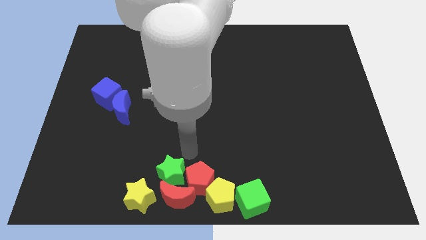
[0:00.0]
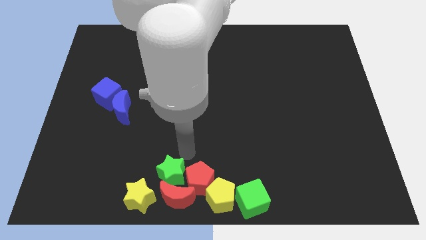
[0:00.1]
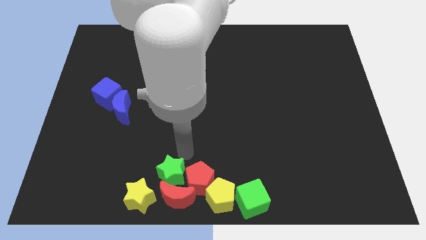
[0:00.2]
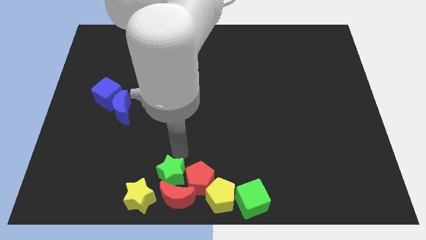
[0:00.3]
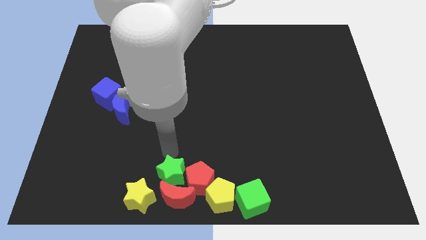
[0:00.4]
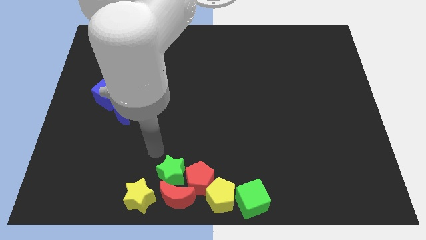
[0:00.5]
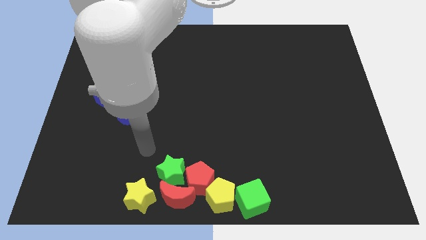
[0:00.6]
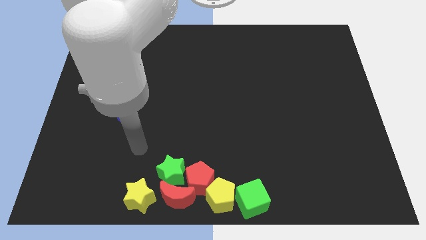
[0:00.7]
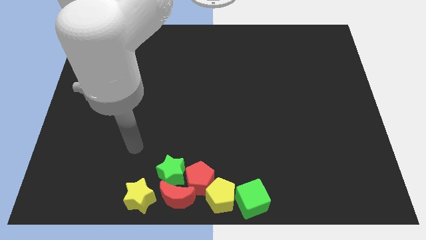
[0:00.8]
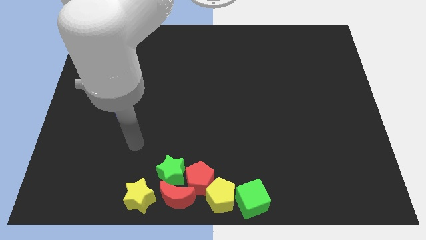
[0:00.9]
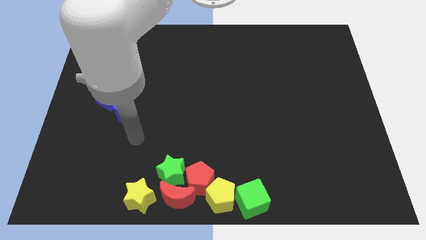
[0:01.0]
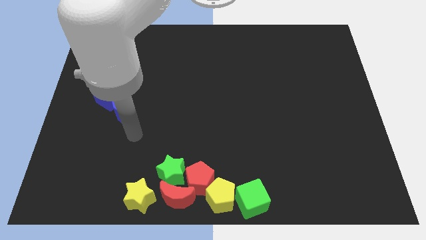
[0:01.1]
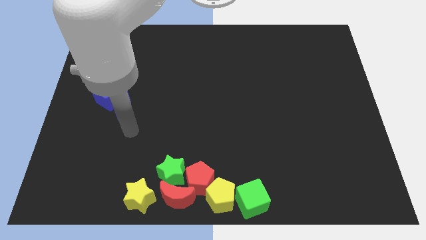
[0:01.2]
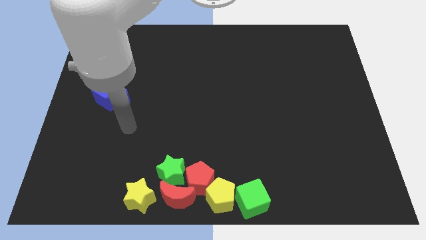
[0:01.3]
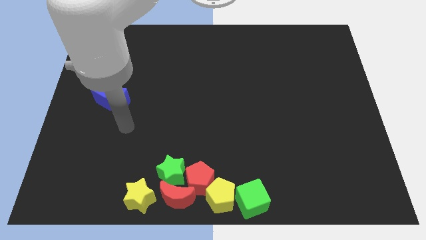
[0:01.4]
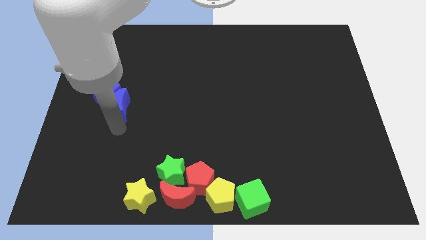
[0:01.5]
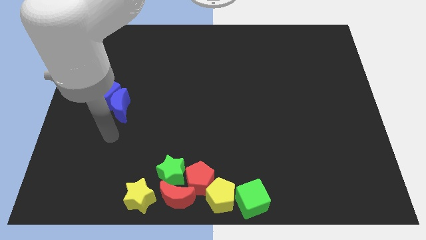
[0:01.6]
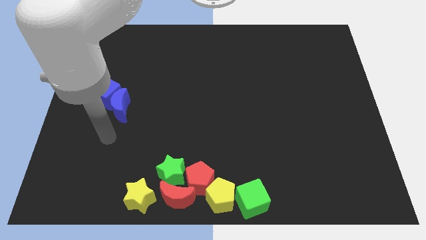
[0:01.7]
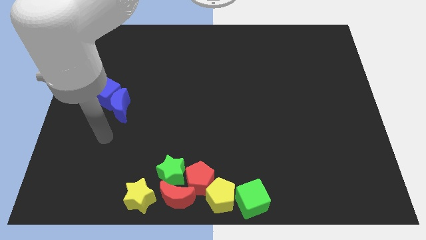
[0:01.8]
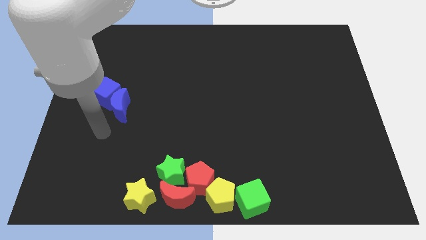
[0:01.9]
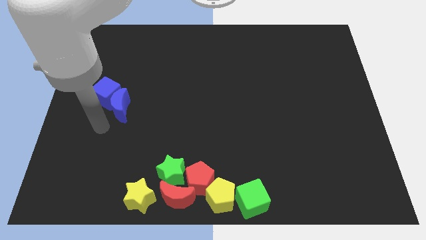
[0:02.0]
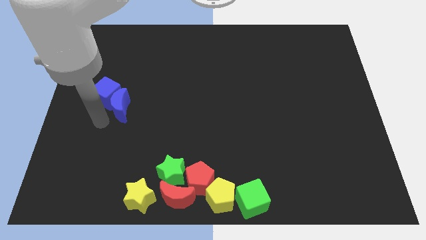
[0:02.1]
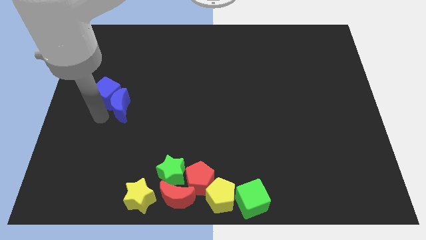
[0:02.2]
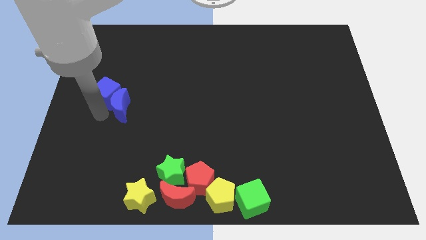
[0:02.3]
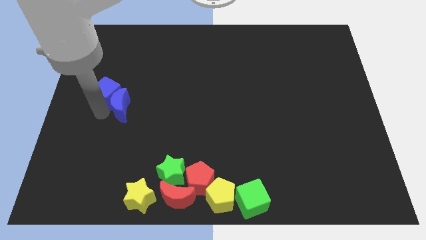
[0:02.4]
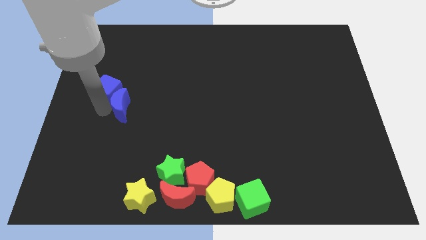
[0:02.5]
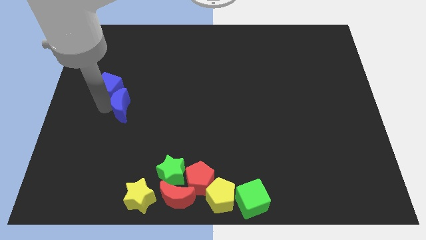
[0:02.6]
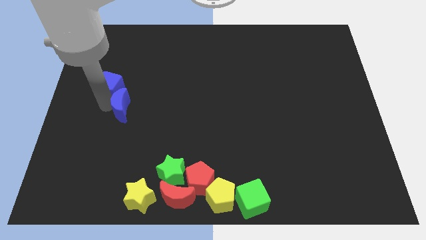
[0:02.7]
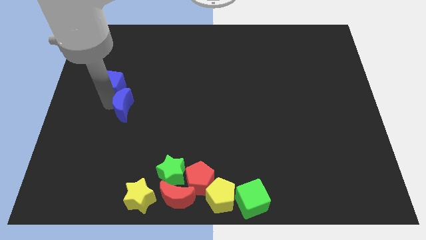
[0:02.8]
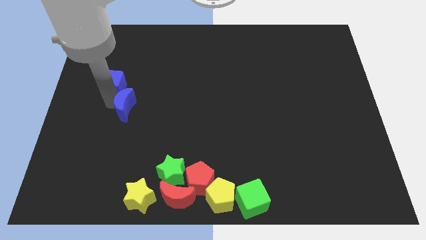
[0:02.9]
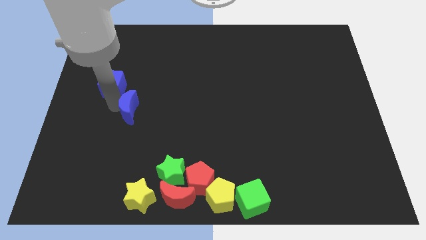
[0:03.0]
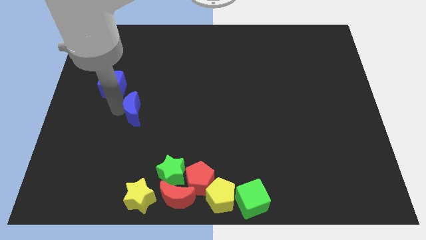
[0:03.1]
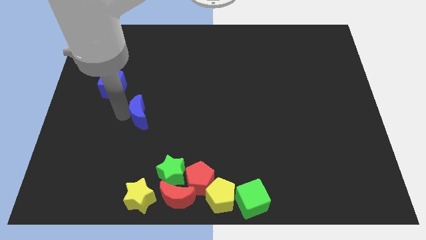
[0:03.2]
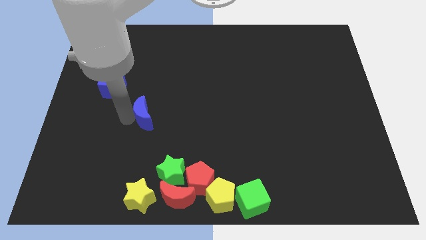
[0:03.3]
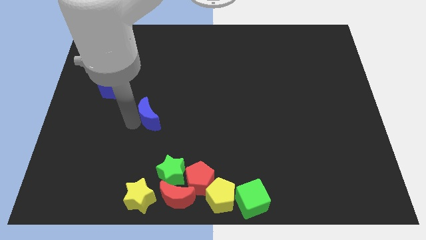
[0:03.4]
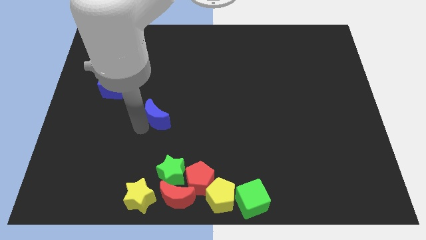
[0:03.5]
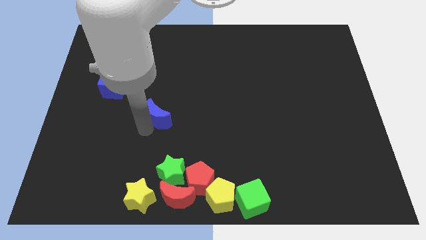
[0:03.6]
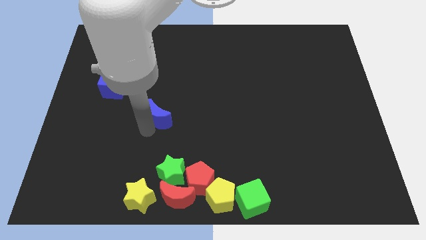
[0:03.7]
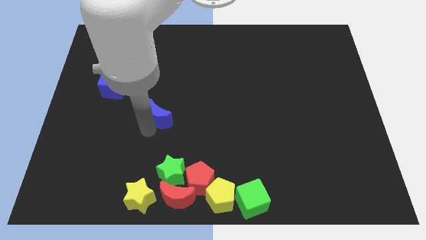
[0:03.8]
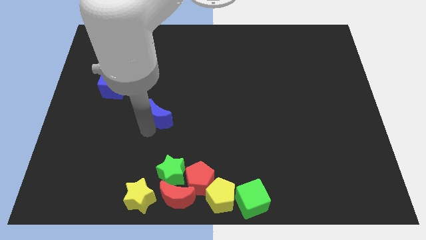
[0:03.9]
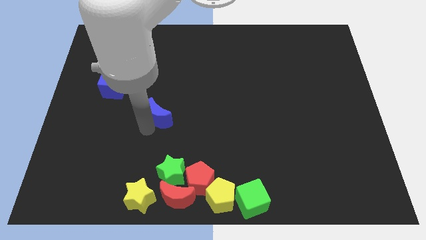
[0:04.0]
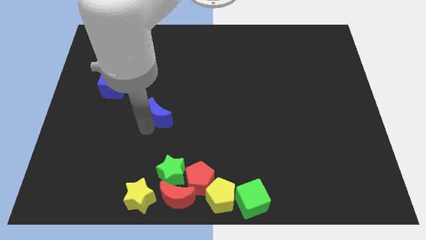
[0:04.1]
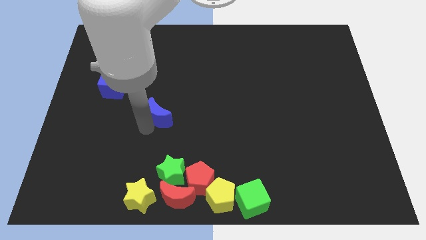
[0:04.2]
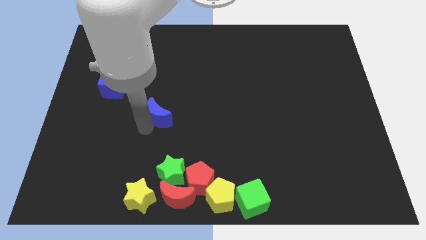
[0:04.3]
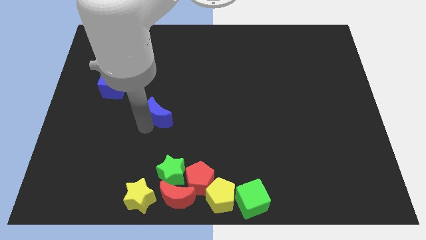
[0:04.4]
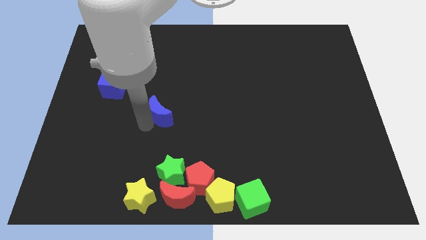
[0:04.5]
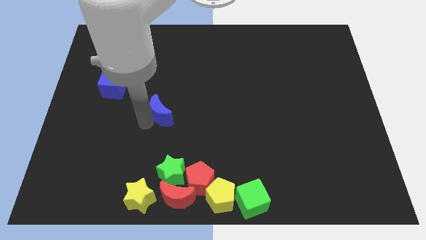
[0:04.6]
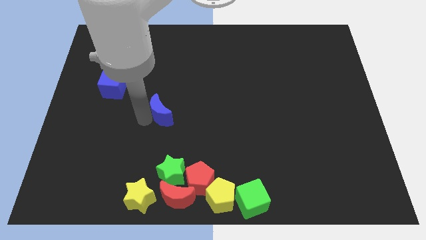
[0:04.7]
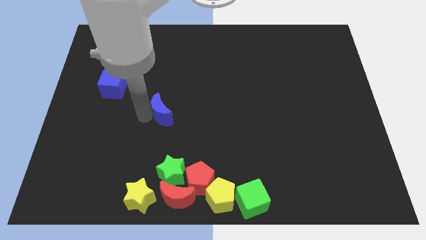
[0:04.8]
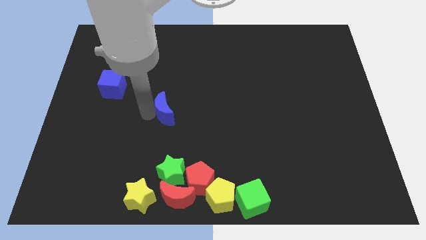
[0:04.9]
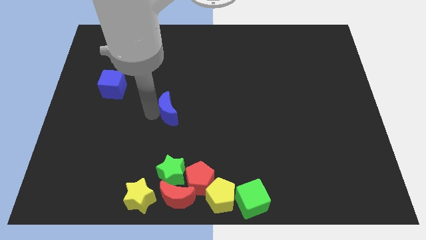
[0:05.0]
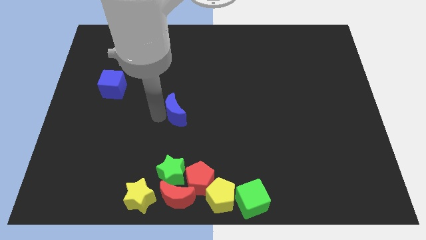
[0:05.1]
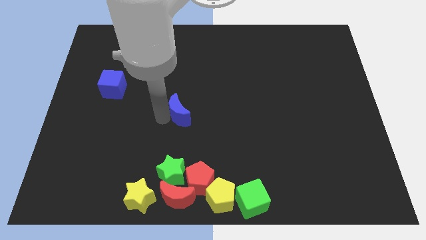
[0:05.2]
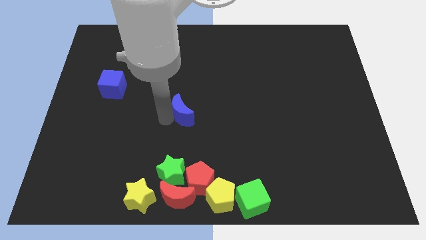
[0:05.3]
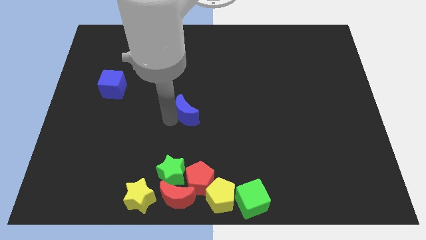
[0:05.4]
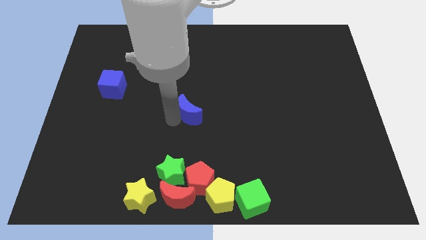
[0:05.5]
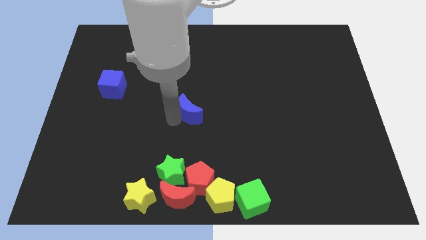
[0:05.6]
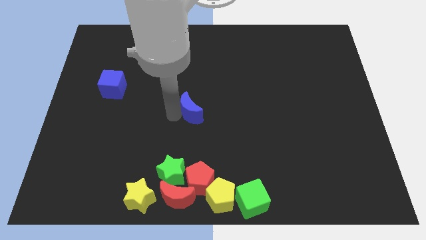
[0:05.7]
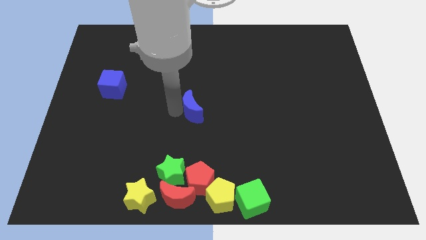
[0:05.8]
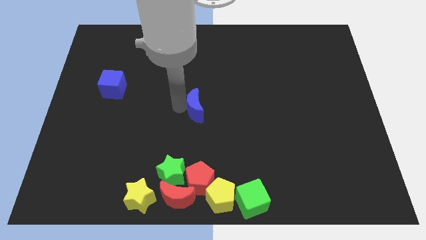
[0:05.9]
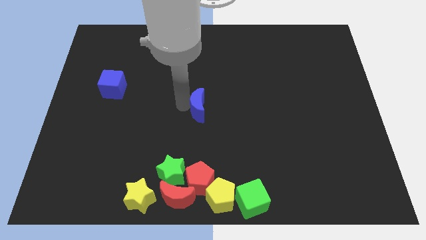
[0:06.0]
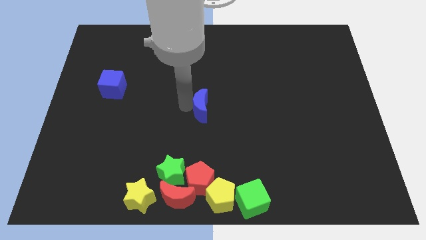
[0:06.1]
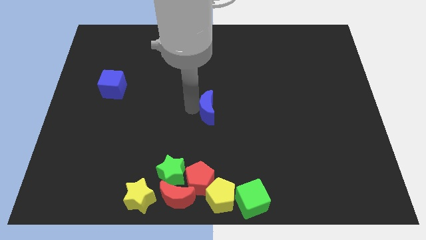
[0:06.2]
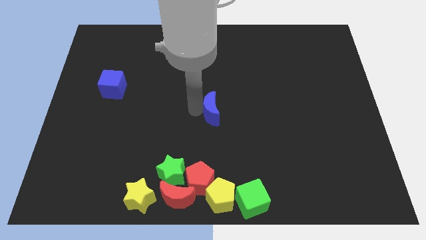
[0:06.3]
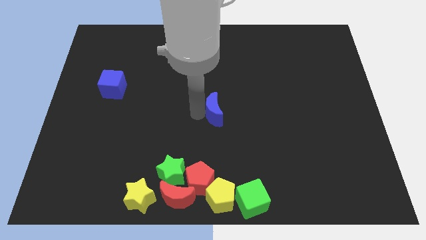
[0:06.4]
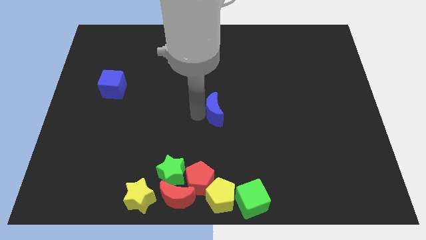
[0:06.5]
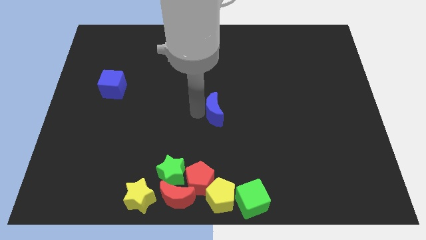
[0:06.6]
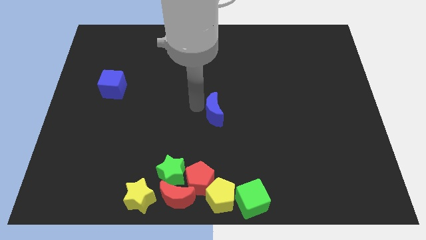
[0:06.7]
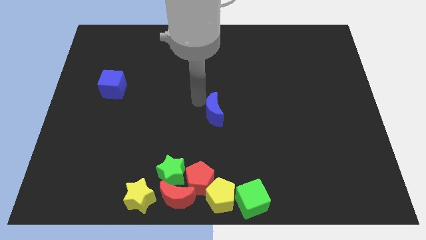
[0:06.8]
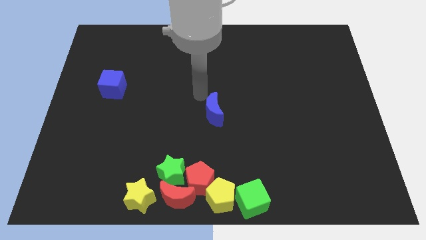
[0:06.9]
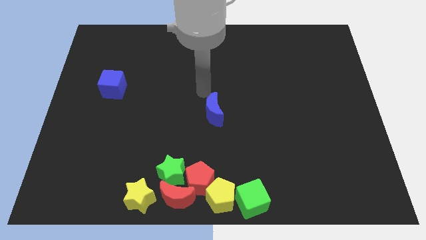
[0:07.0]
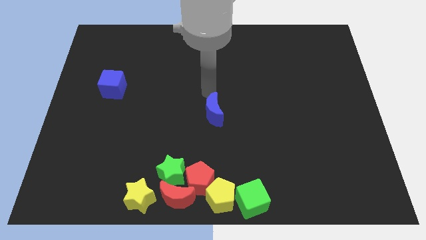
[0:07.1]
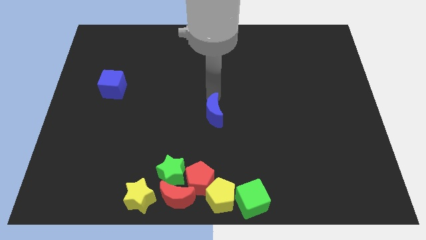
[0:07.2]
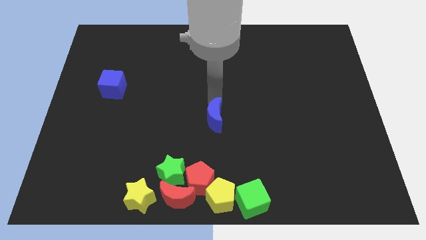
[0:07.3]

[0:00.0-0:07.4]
move the blue crescent to the middle of the board

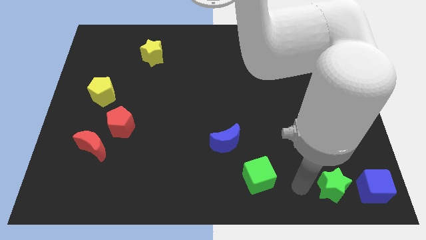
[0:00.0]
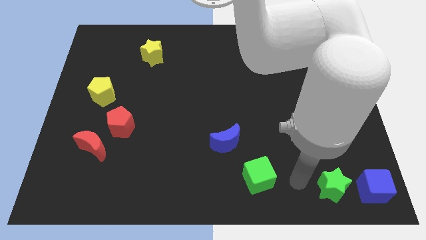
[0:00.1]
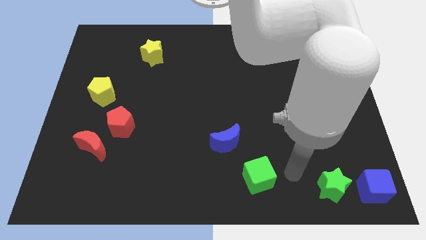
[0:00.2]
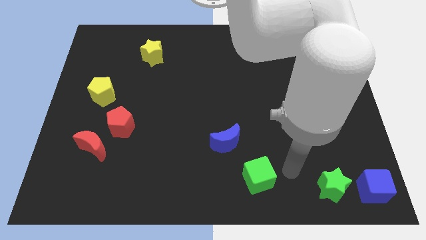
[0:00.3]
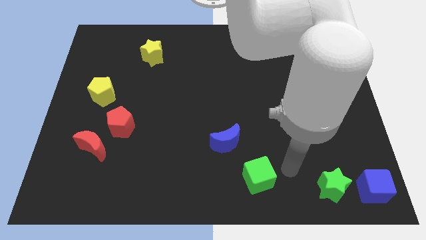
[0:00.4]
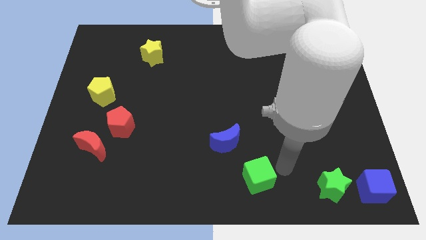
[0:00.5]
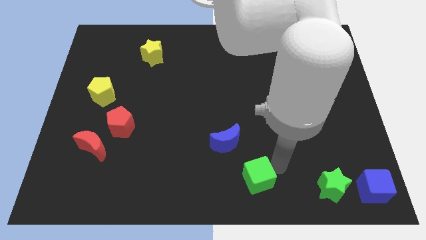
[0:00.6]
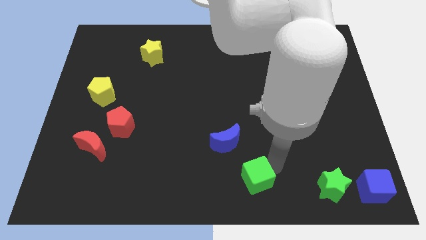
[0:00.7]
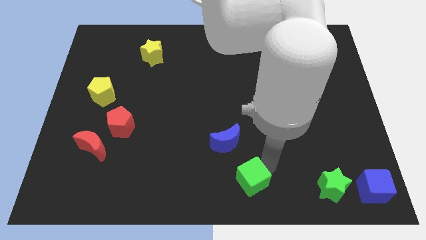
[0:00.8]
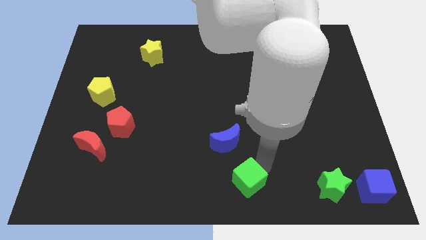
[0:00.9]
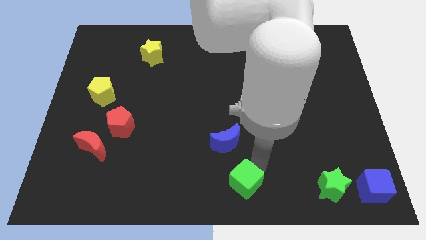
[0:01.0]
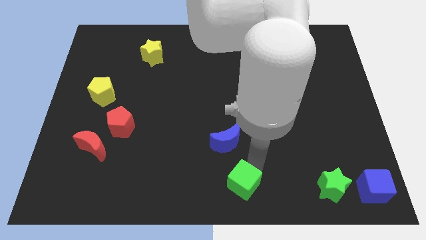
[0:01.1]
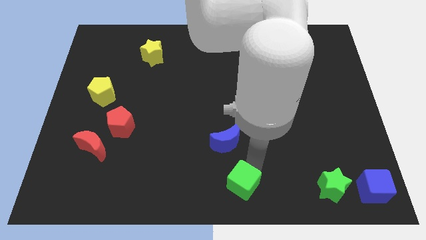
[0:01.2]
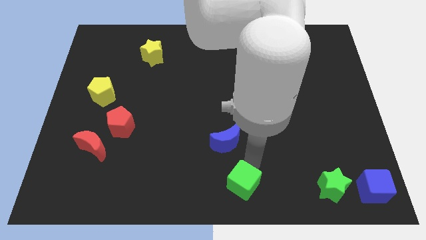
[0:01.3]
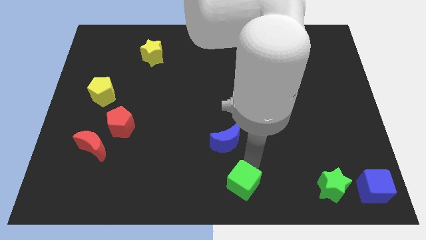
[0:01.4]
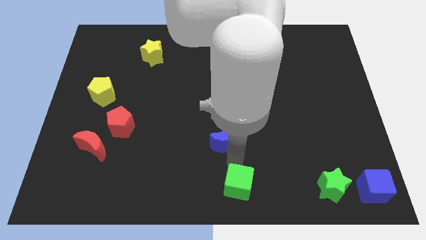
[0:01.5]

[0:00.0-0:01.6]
place the green cube below the blue moon
